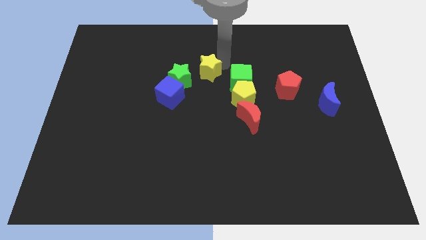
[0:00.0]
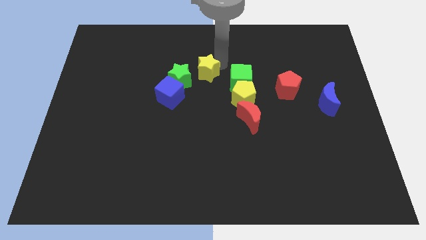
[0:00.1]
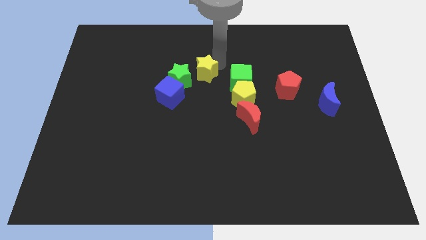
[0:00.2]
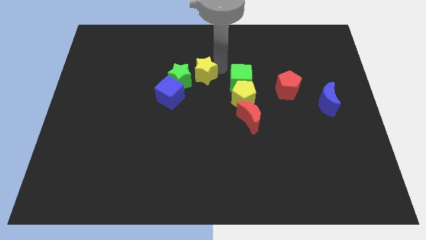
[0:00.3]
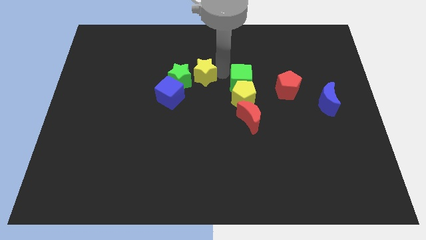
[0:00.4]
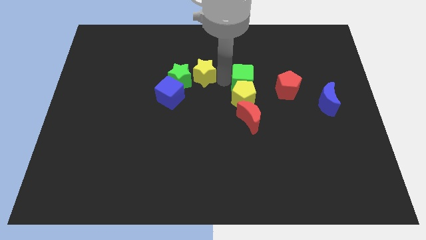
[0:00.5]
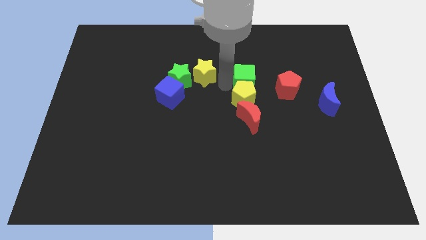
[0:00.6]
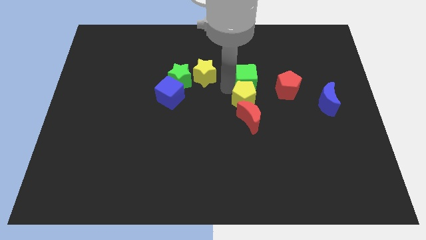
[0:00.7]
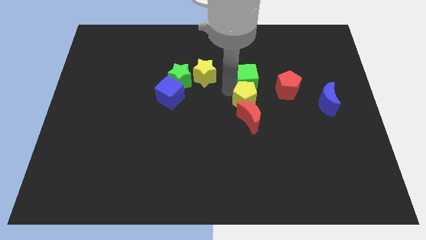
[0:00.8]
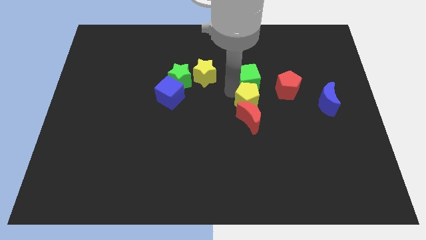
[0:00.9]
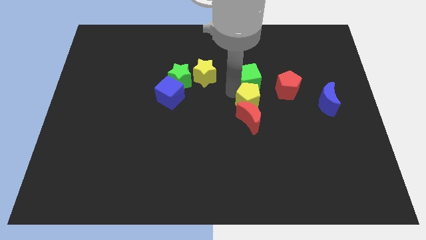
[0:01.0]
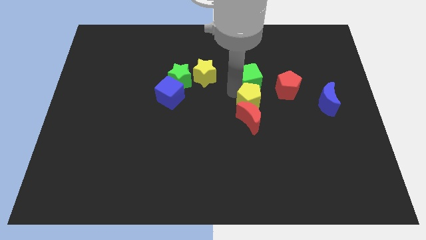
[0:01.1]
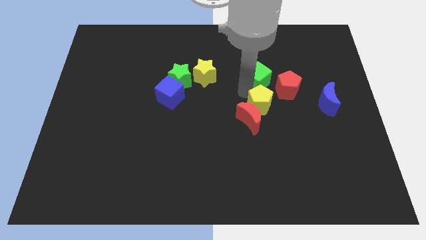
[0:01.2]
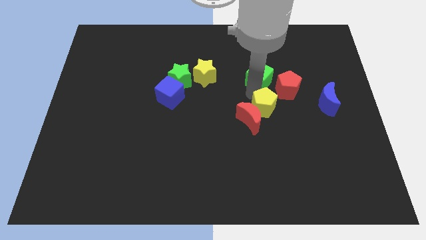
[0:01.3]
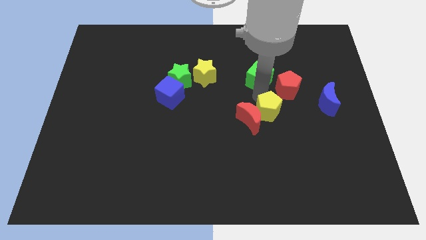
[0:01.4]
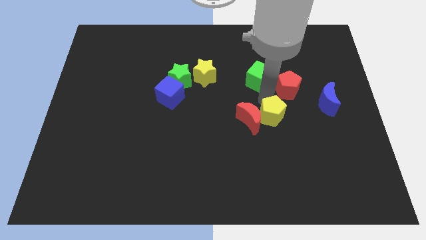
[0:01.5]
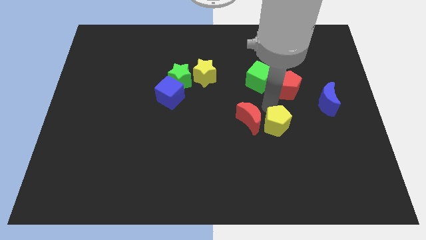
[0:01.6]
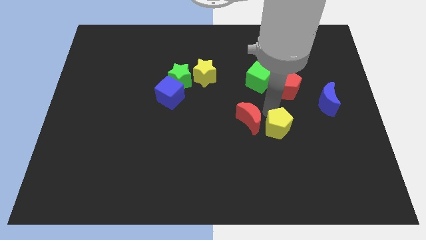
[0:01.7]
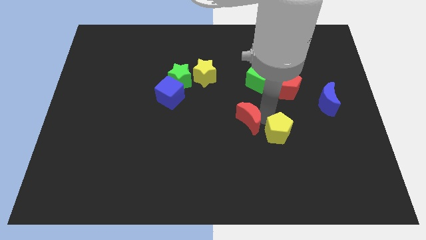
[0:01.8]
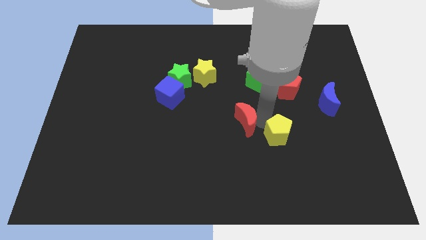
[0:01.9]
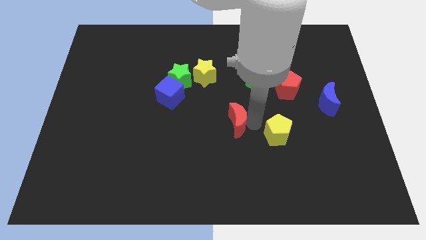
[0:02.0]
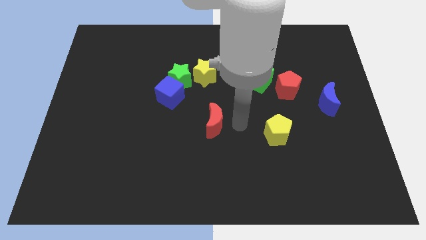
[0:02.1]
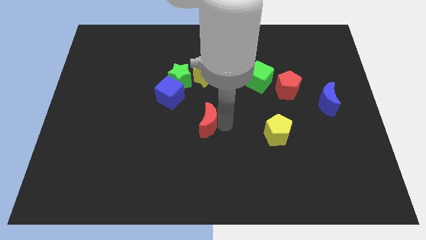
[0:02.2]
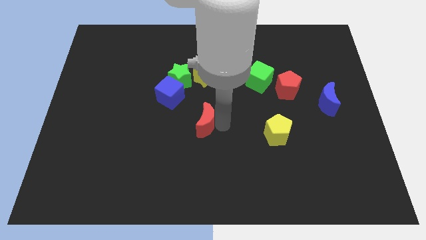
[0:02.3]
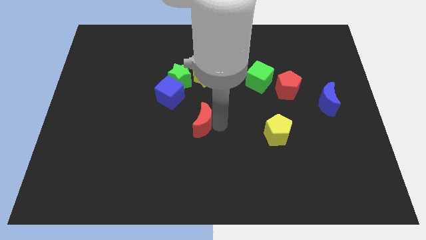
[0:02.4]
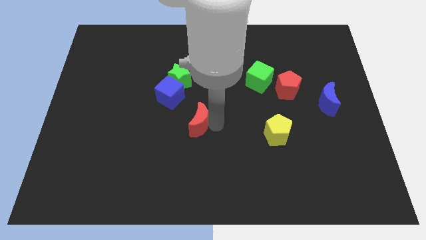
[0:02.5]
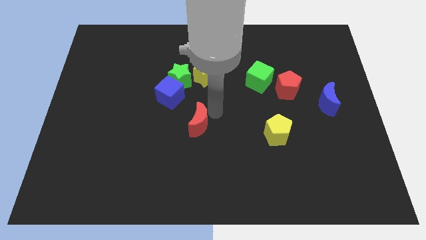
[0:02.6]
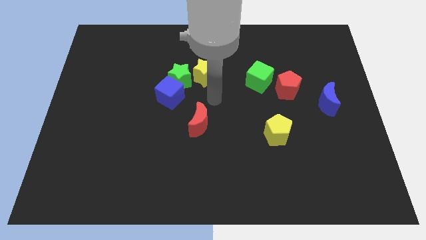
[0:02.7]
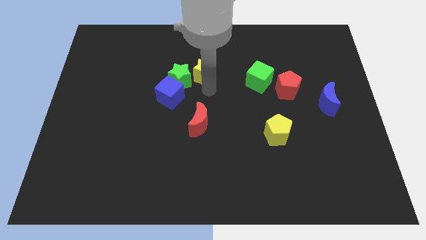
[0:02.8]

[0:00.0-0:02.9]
separate yellow pentagon and red moon

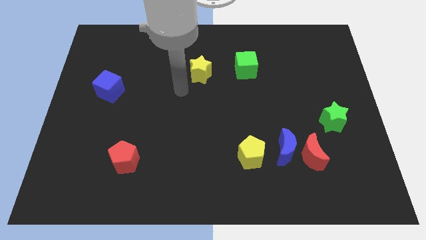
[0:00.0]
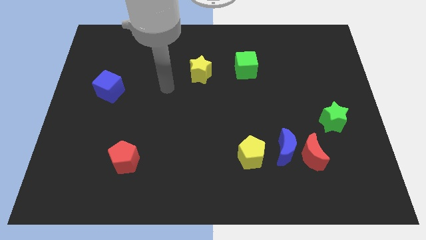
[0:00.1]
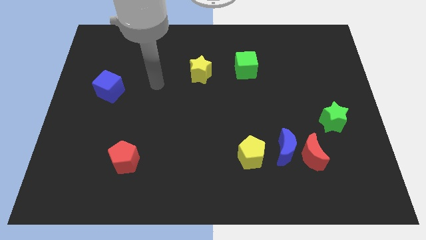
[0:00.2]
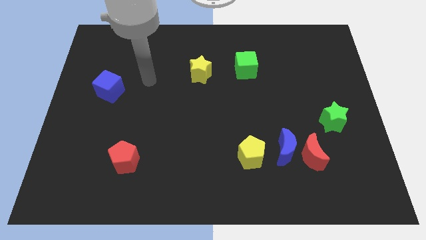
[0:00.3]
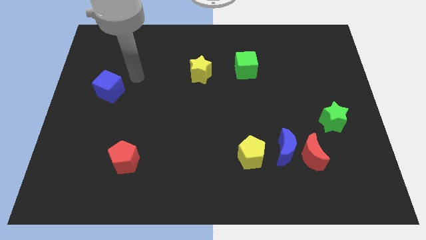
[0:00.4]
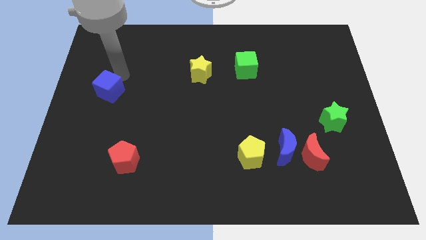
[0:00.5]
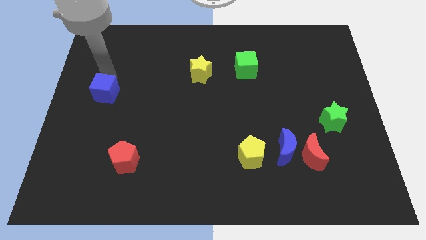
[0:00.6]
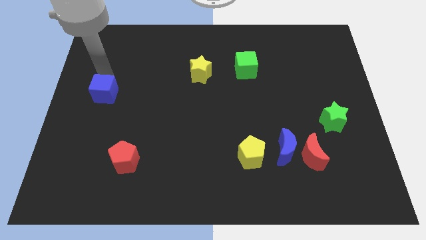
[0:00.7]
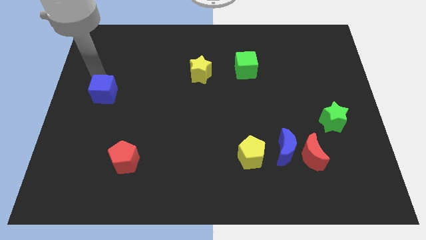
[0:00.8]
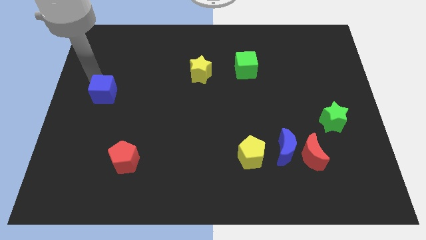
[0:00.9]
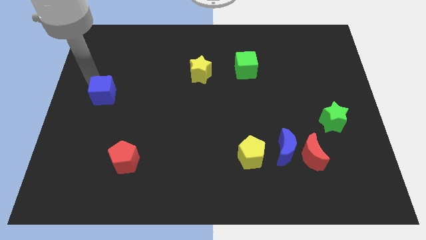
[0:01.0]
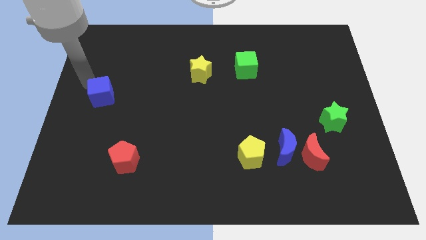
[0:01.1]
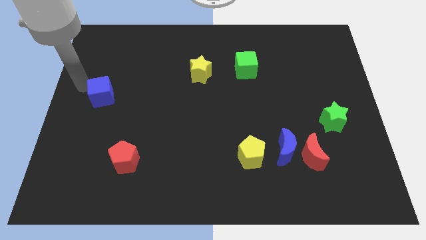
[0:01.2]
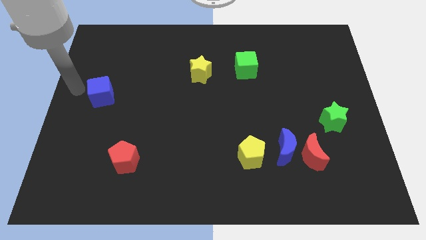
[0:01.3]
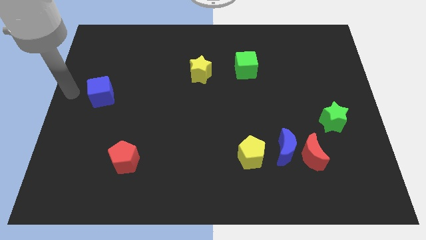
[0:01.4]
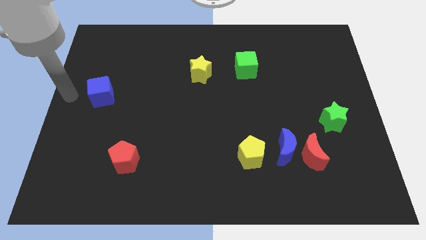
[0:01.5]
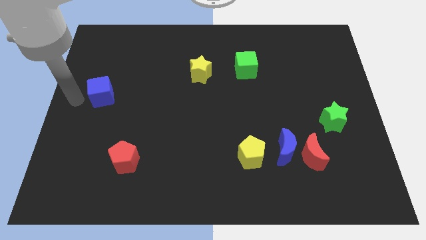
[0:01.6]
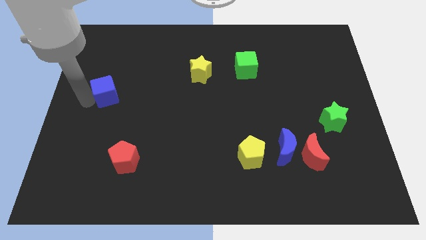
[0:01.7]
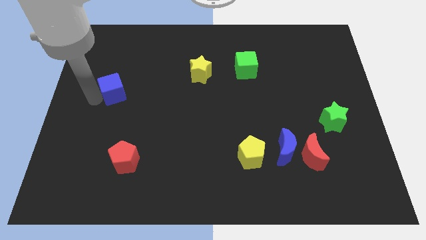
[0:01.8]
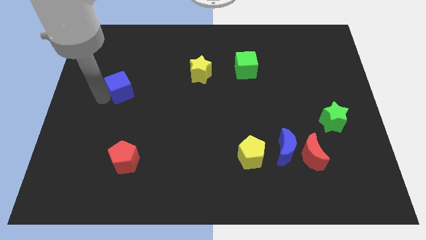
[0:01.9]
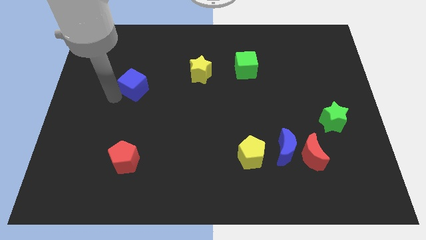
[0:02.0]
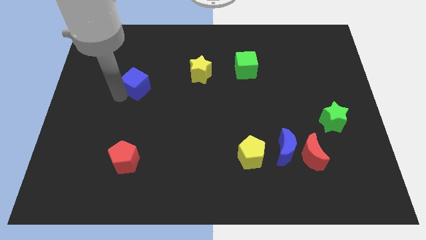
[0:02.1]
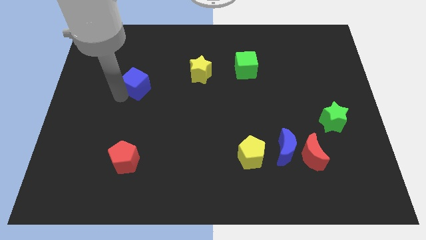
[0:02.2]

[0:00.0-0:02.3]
move the blue cube towards yellow star

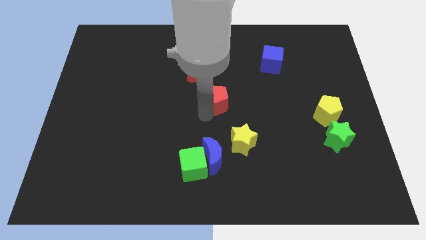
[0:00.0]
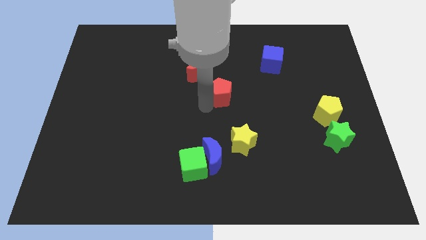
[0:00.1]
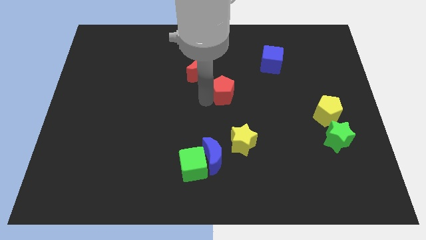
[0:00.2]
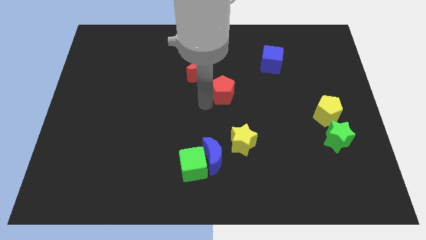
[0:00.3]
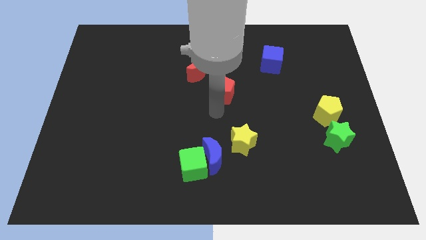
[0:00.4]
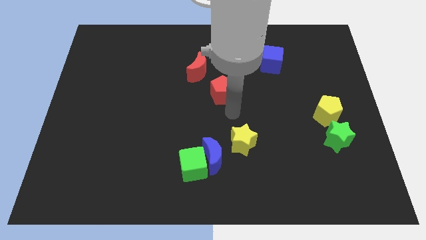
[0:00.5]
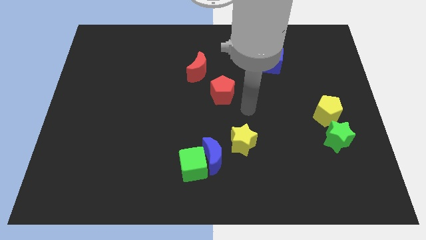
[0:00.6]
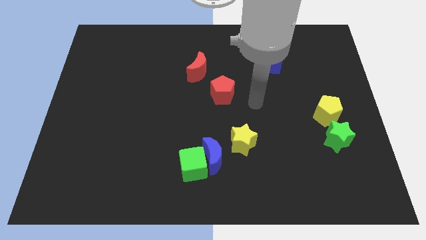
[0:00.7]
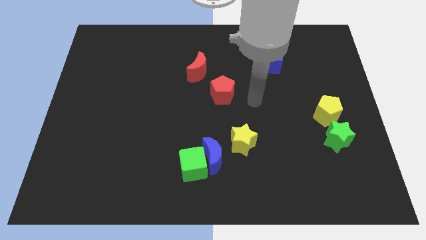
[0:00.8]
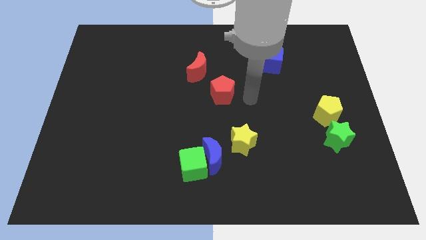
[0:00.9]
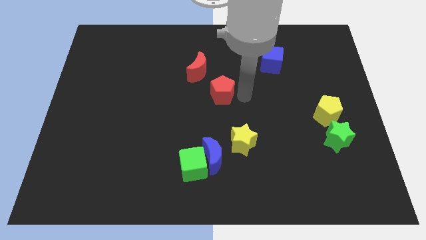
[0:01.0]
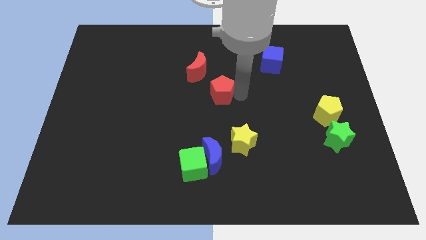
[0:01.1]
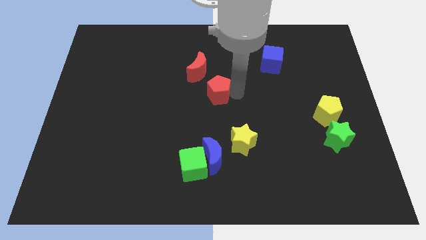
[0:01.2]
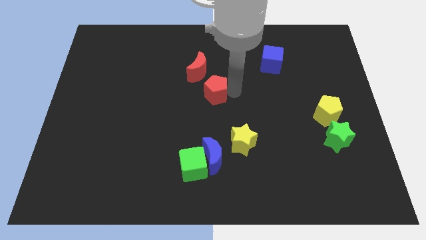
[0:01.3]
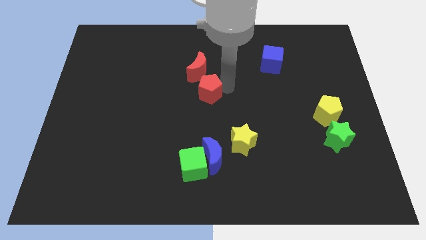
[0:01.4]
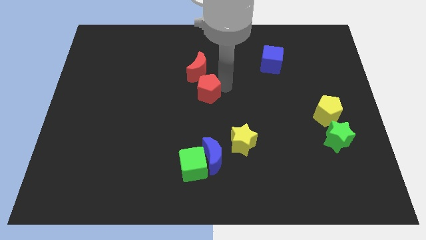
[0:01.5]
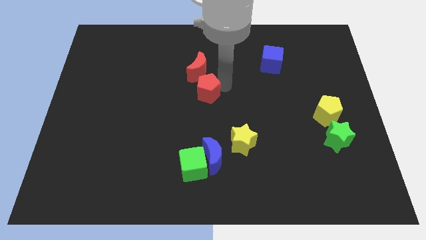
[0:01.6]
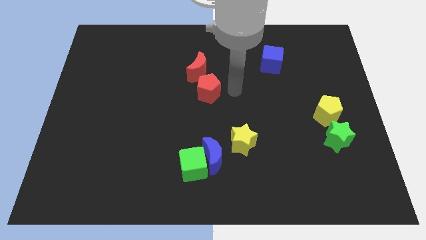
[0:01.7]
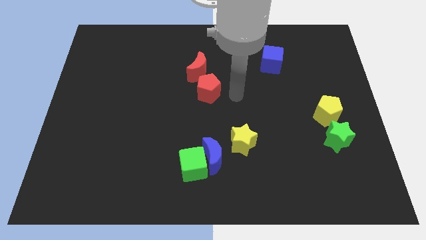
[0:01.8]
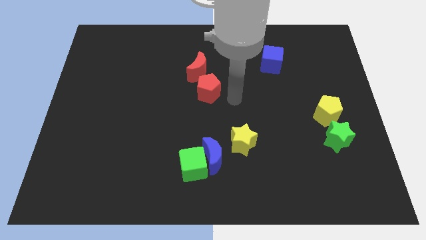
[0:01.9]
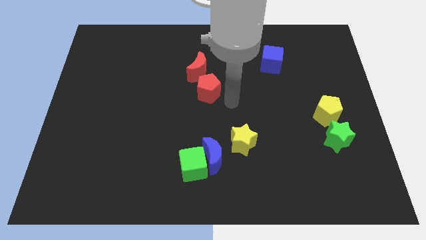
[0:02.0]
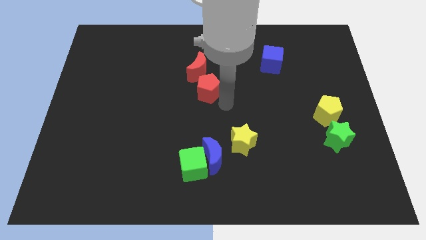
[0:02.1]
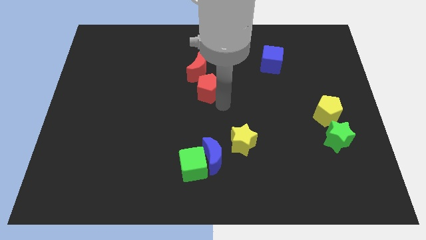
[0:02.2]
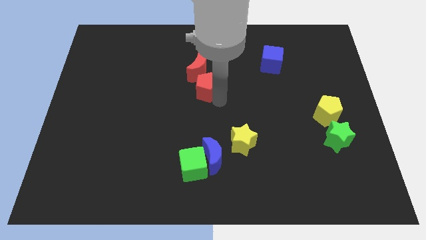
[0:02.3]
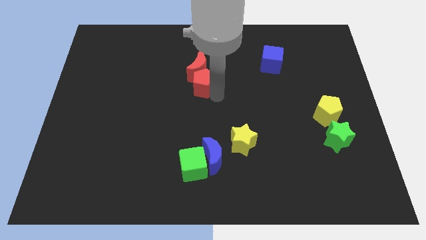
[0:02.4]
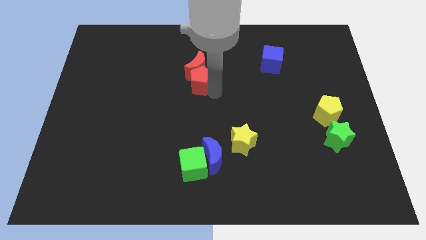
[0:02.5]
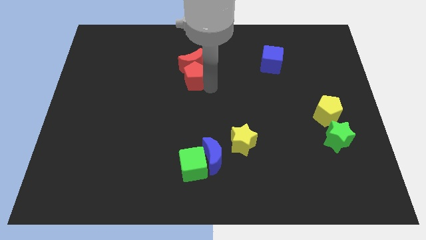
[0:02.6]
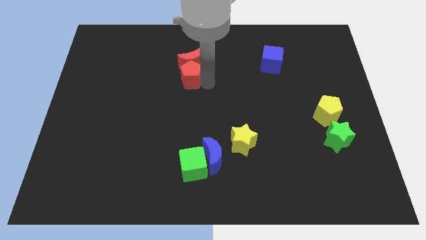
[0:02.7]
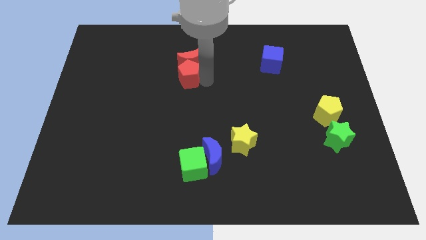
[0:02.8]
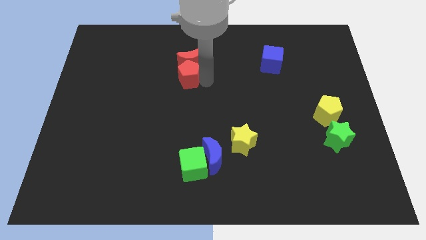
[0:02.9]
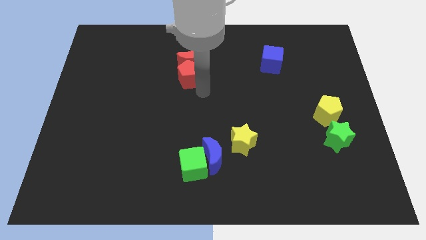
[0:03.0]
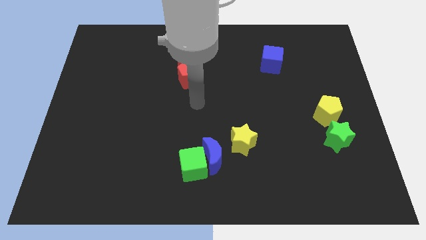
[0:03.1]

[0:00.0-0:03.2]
slide the red pentagon into the red moon

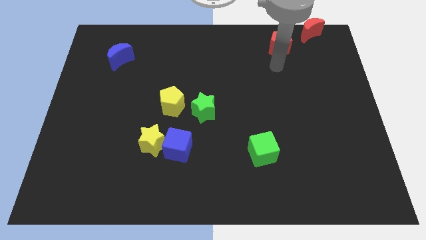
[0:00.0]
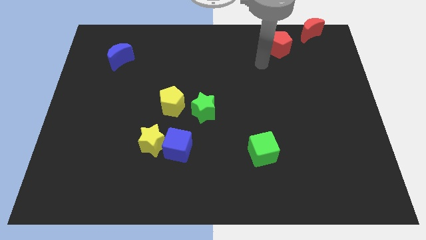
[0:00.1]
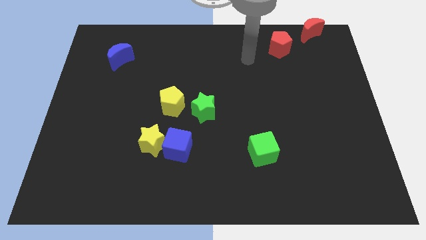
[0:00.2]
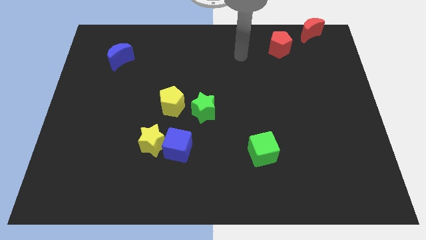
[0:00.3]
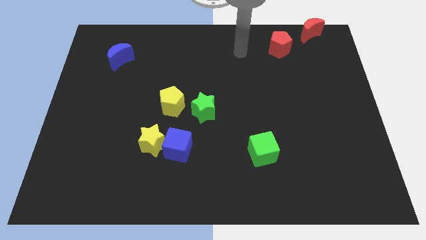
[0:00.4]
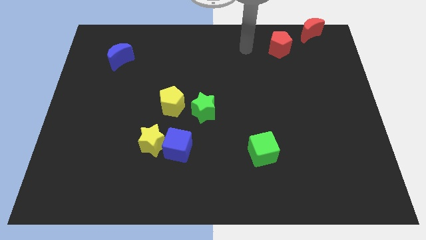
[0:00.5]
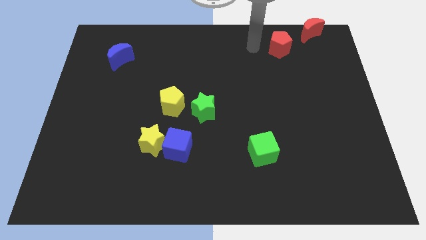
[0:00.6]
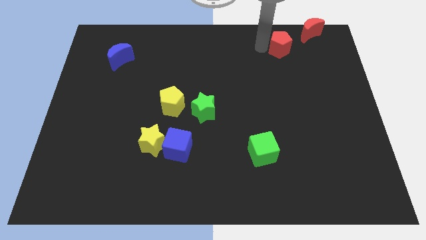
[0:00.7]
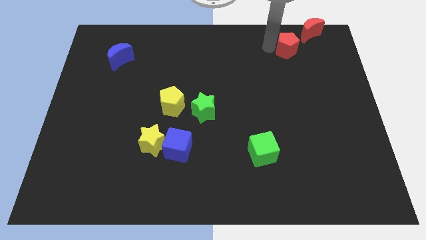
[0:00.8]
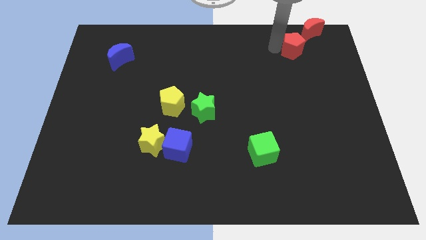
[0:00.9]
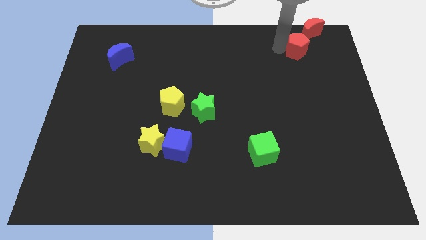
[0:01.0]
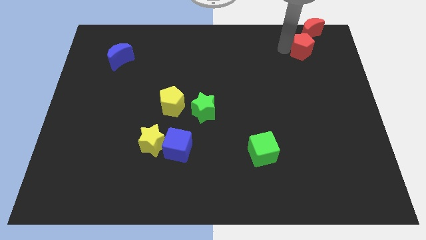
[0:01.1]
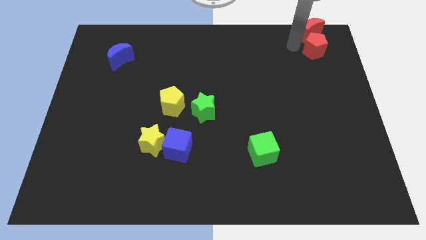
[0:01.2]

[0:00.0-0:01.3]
push the red pentagon to the bottom of the red crescent
